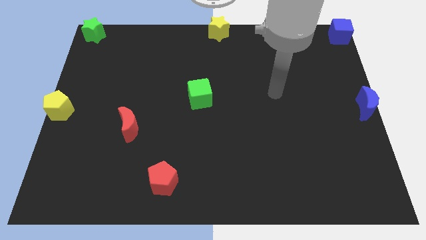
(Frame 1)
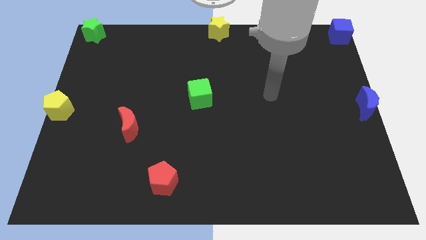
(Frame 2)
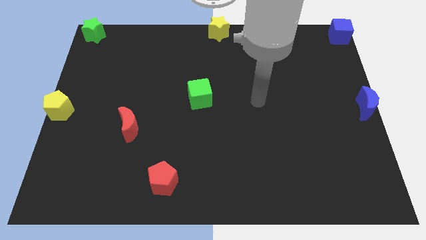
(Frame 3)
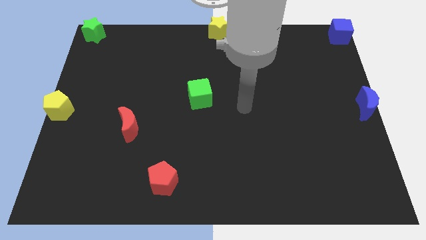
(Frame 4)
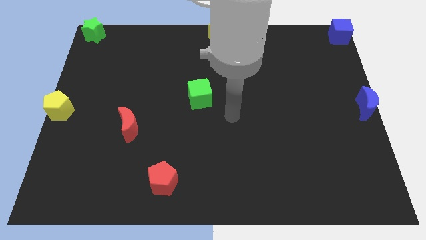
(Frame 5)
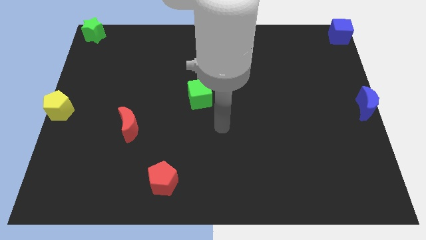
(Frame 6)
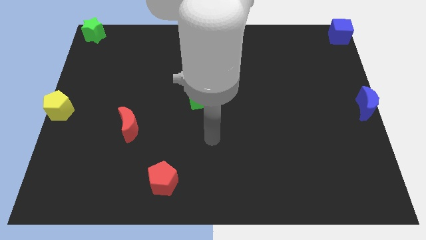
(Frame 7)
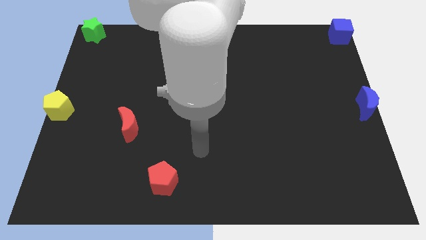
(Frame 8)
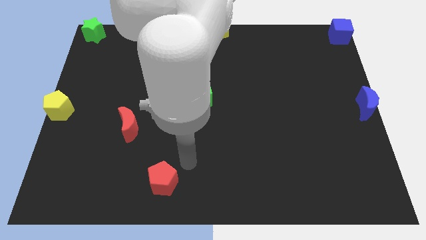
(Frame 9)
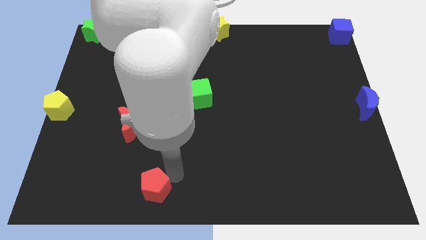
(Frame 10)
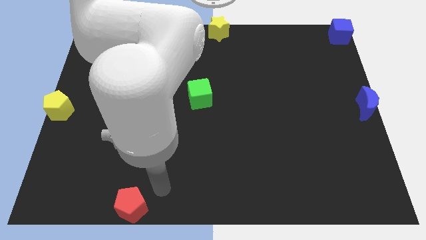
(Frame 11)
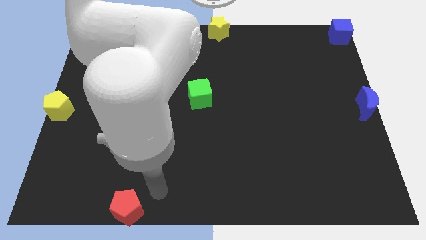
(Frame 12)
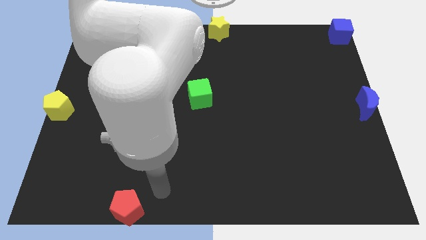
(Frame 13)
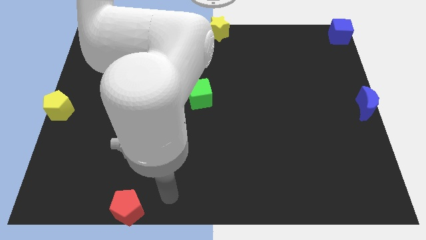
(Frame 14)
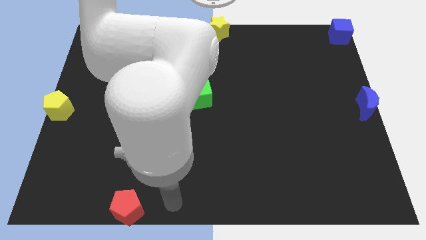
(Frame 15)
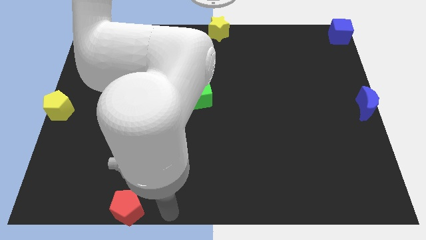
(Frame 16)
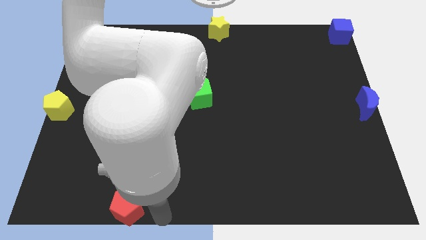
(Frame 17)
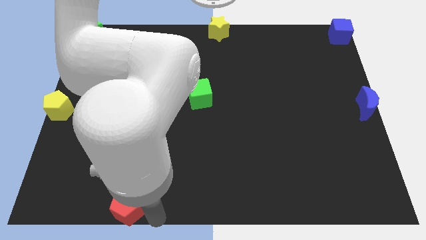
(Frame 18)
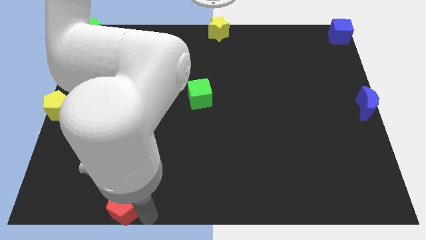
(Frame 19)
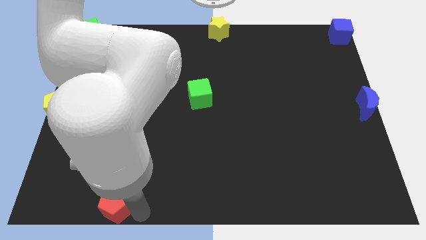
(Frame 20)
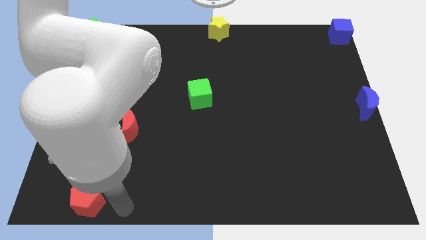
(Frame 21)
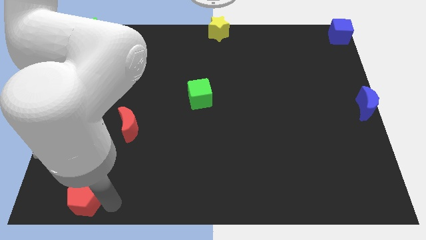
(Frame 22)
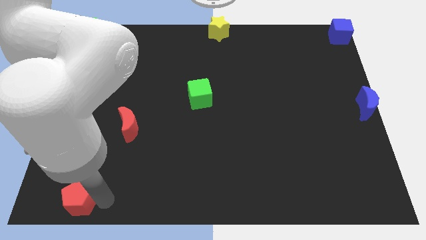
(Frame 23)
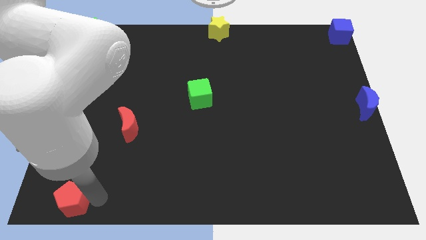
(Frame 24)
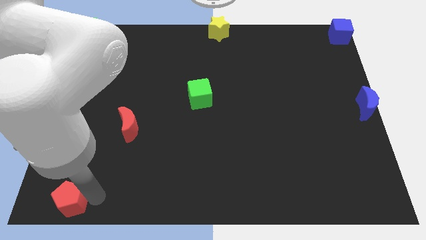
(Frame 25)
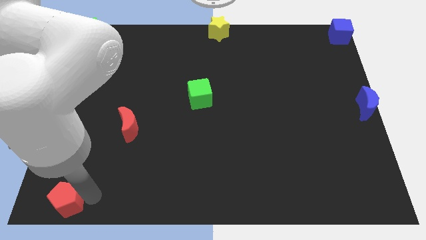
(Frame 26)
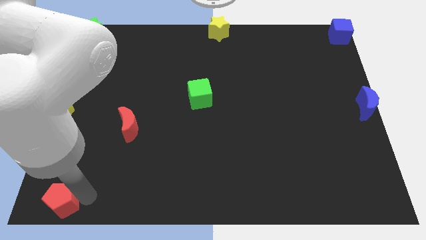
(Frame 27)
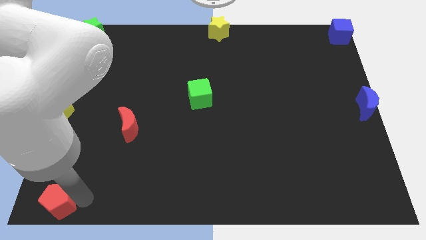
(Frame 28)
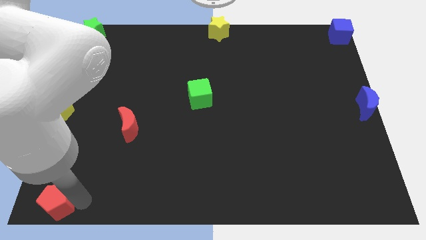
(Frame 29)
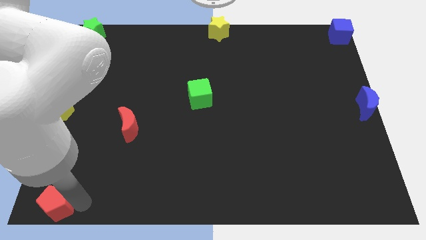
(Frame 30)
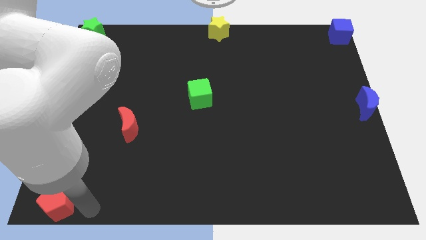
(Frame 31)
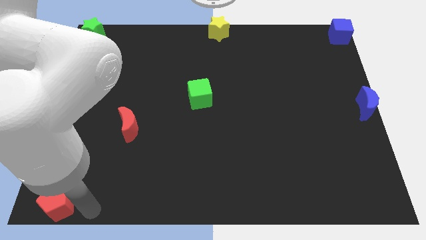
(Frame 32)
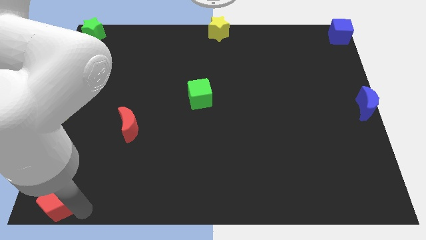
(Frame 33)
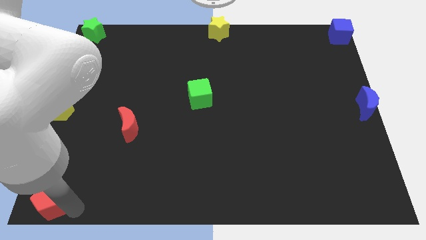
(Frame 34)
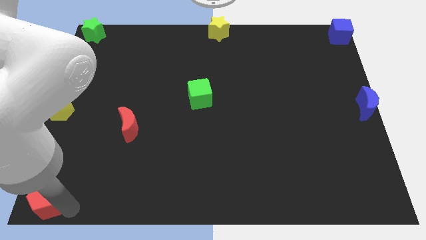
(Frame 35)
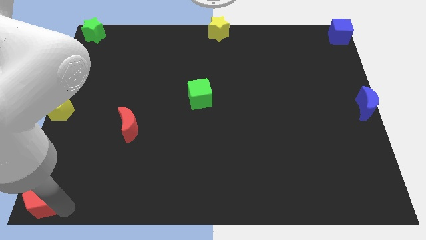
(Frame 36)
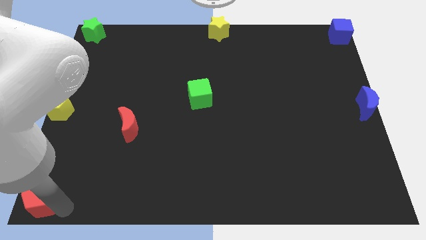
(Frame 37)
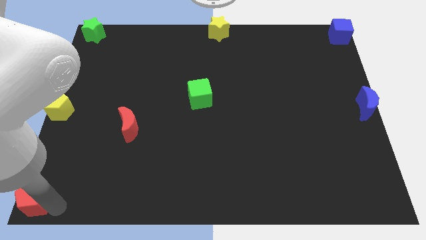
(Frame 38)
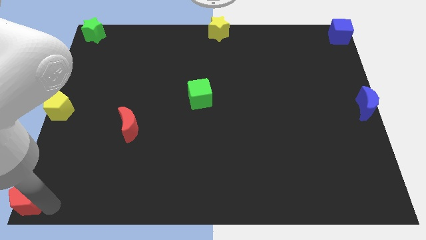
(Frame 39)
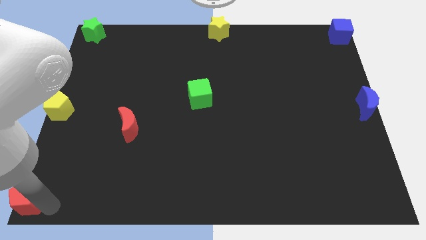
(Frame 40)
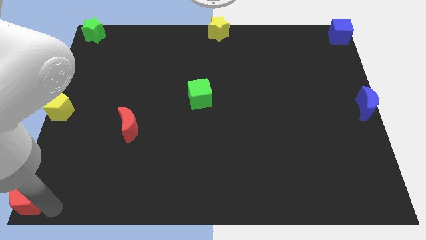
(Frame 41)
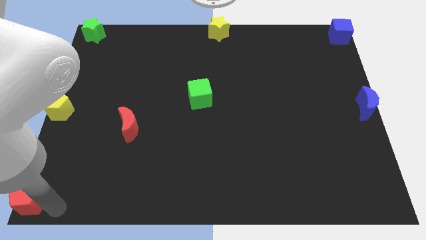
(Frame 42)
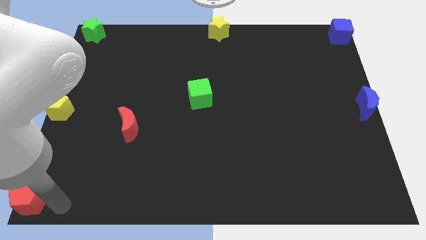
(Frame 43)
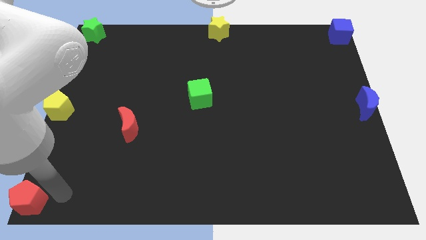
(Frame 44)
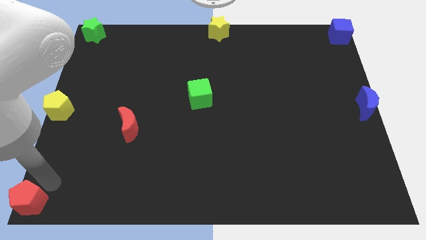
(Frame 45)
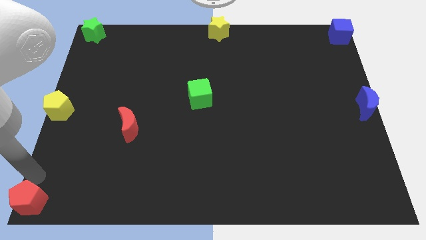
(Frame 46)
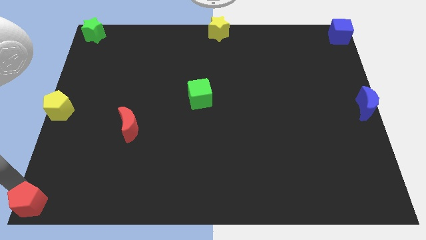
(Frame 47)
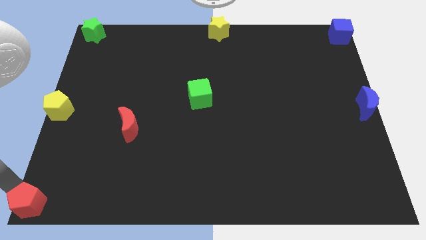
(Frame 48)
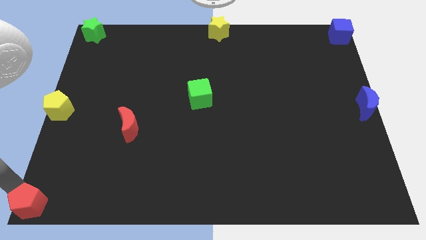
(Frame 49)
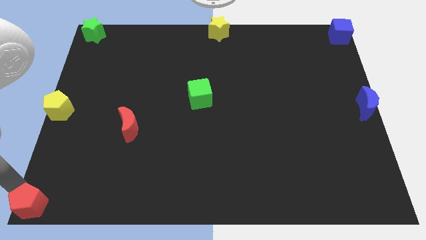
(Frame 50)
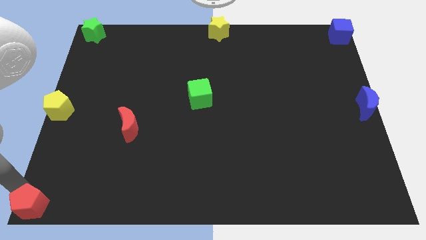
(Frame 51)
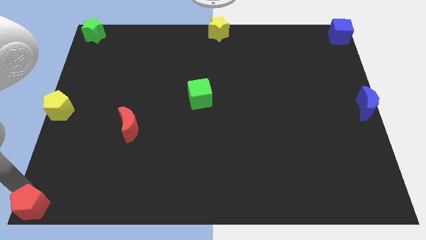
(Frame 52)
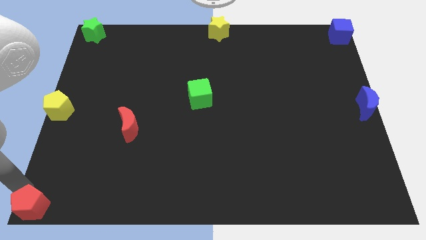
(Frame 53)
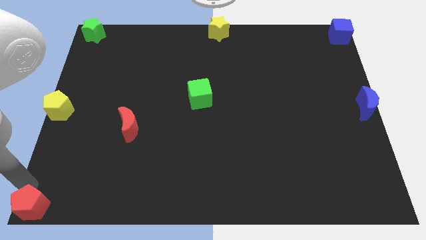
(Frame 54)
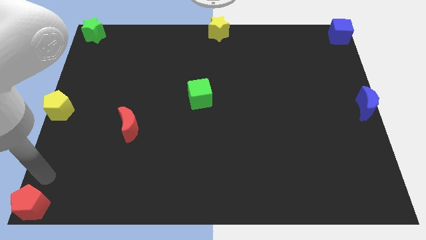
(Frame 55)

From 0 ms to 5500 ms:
move red pentagon to the bottom left

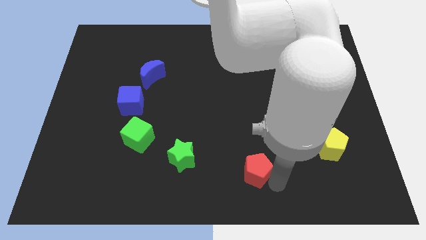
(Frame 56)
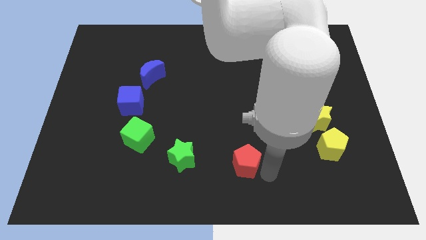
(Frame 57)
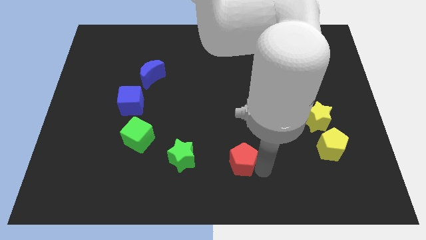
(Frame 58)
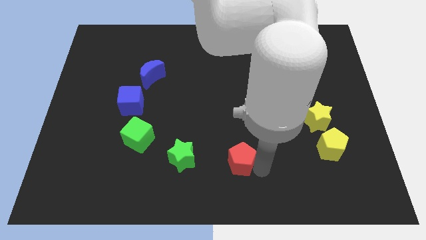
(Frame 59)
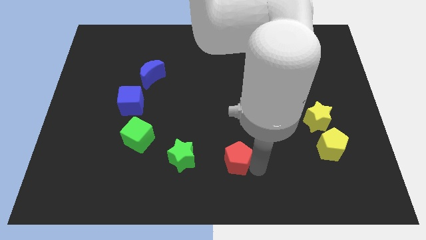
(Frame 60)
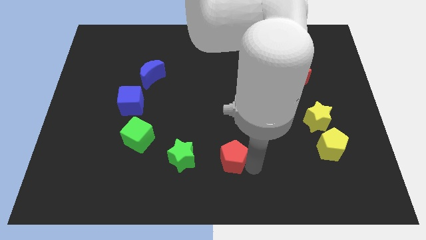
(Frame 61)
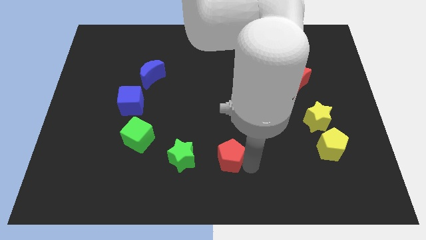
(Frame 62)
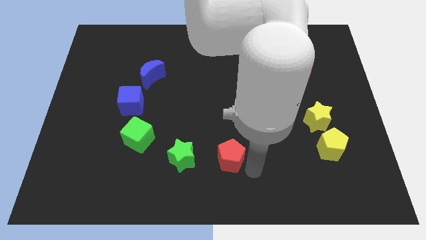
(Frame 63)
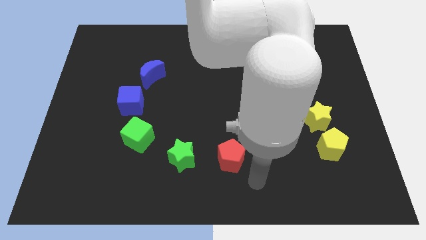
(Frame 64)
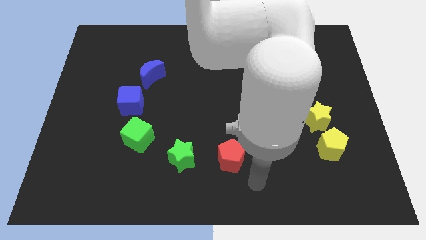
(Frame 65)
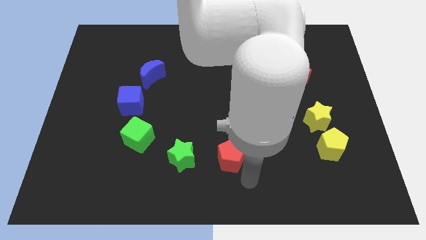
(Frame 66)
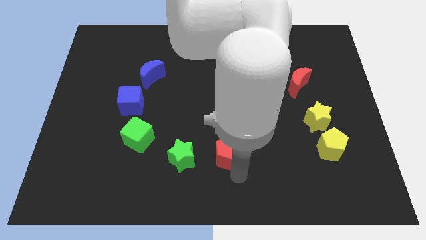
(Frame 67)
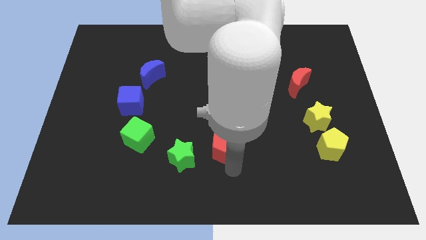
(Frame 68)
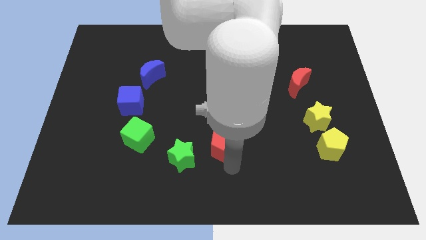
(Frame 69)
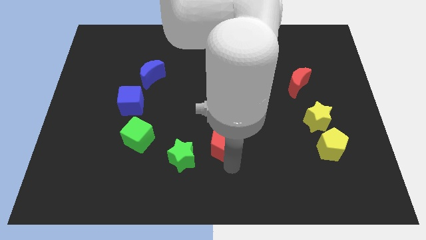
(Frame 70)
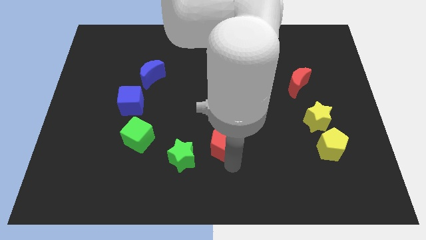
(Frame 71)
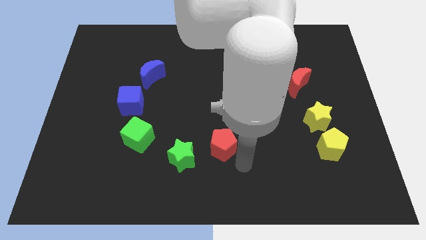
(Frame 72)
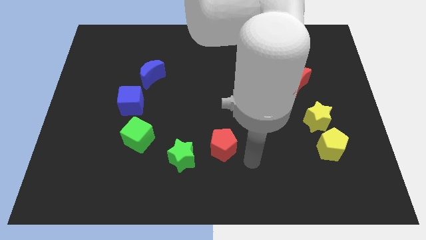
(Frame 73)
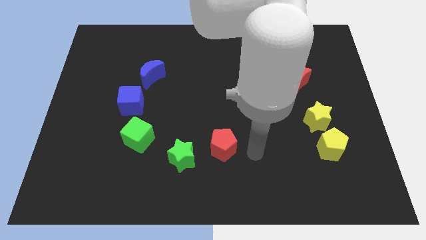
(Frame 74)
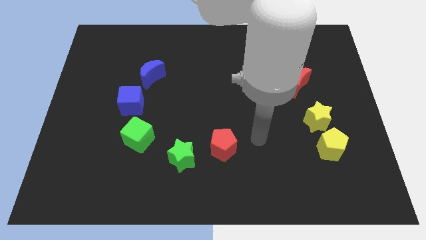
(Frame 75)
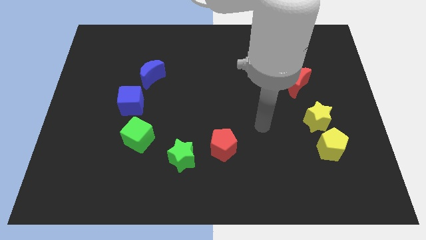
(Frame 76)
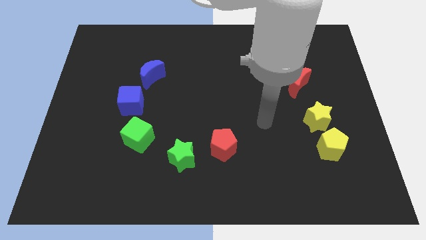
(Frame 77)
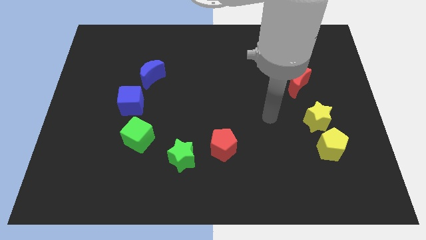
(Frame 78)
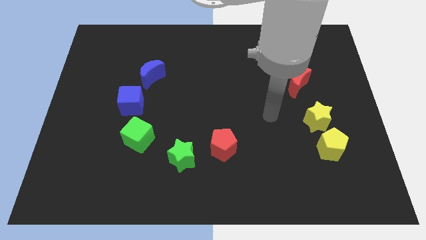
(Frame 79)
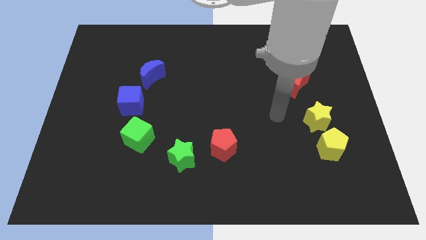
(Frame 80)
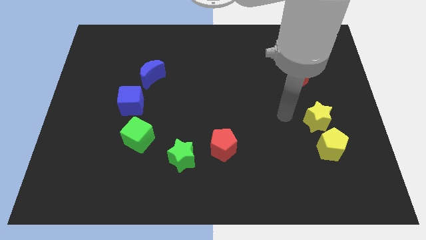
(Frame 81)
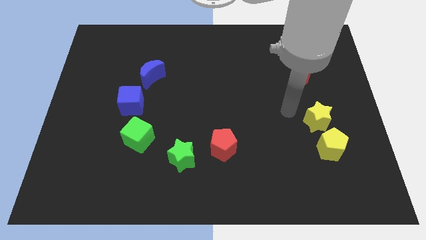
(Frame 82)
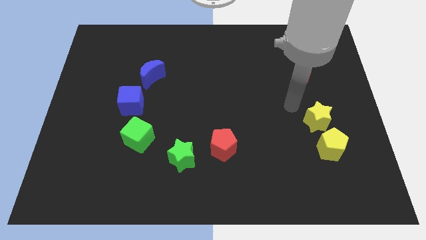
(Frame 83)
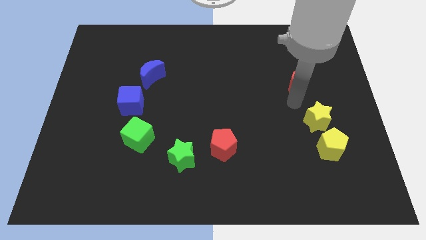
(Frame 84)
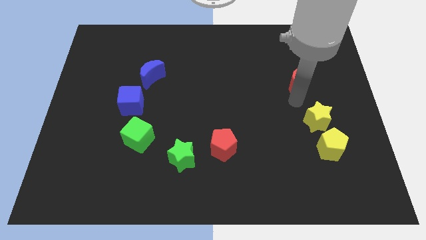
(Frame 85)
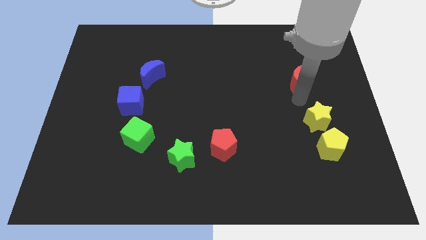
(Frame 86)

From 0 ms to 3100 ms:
place red pentagon to the right of green cube

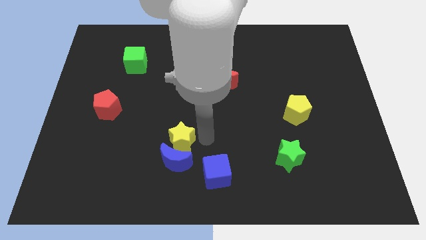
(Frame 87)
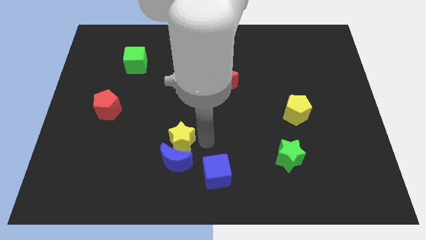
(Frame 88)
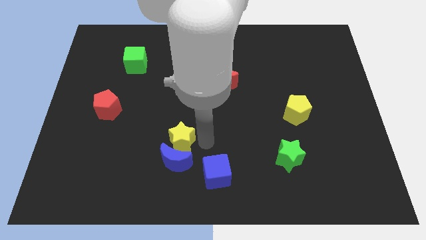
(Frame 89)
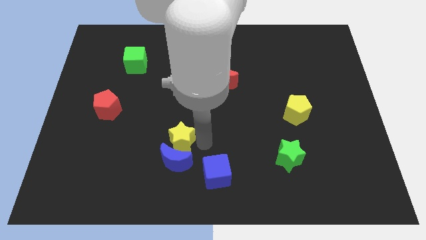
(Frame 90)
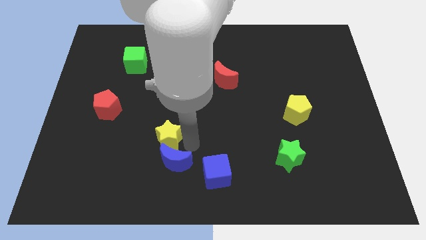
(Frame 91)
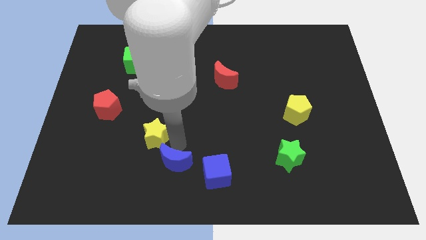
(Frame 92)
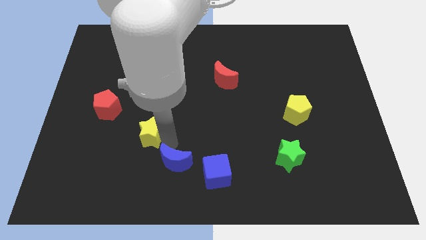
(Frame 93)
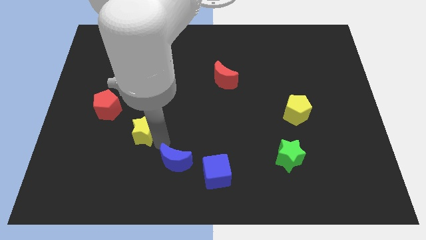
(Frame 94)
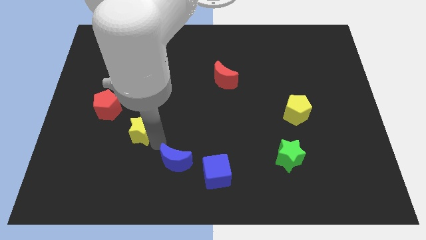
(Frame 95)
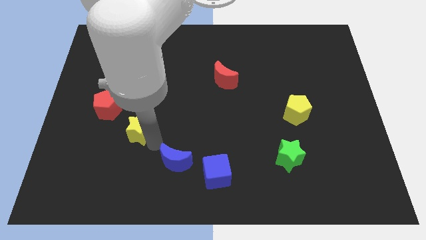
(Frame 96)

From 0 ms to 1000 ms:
place the yellow star in between the red pentagon and the blue crescent to form a diagonal line
